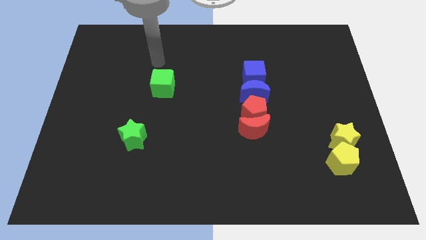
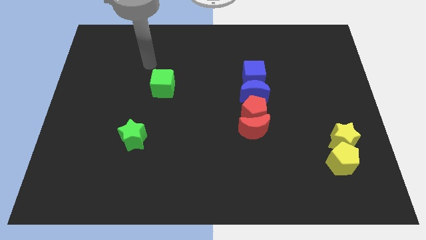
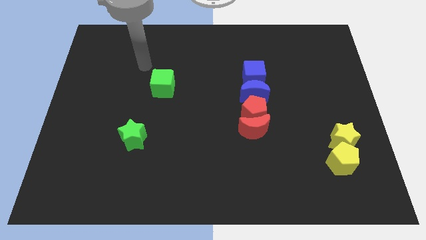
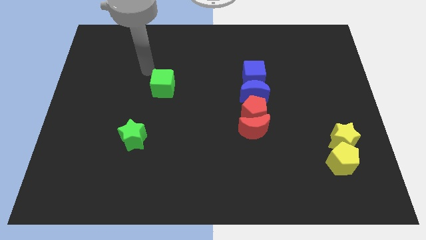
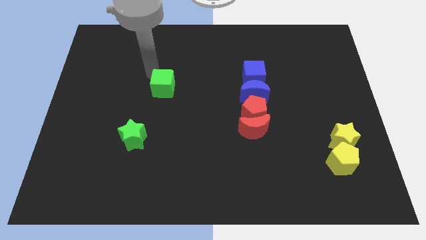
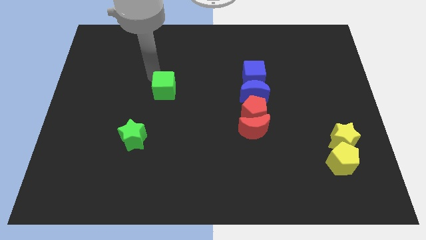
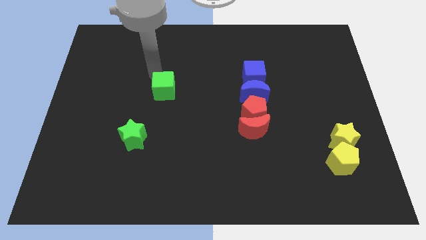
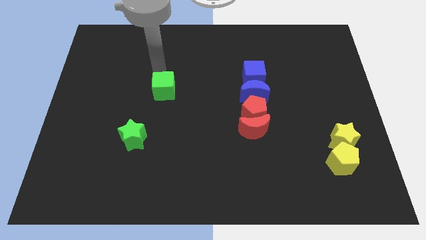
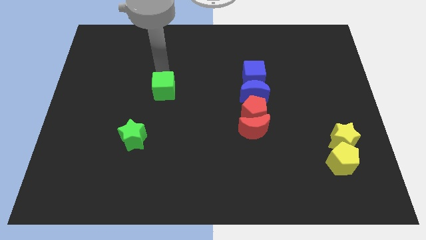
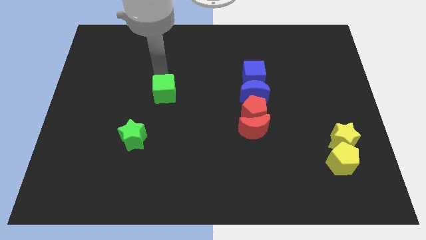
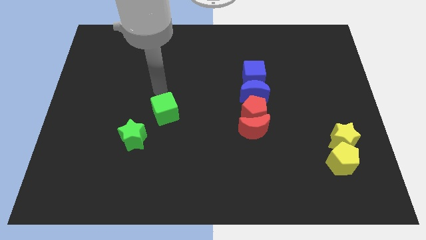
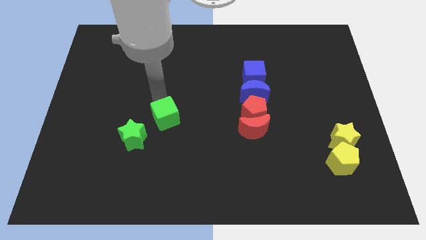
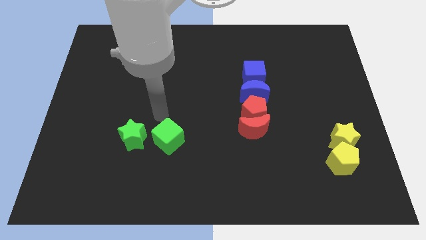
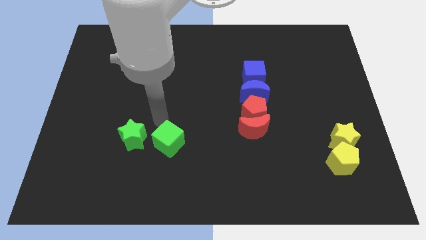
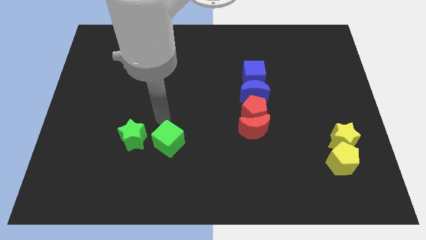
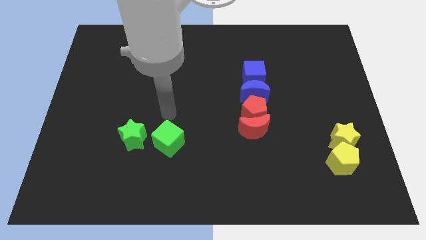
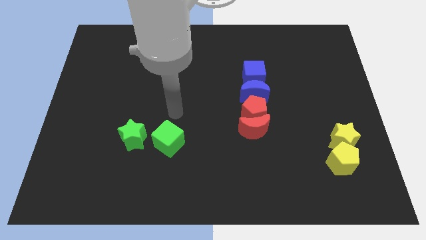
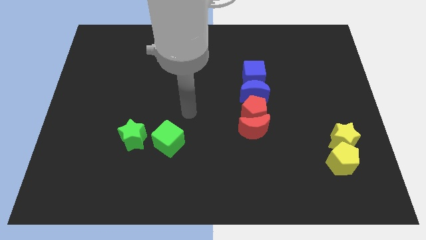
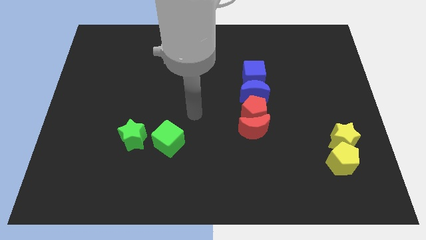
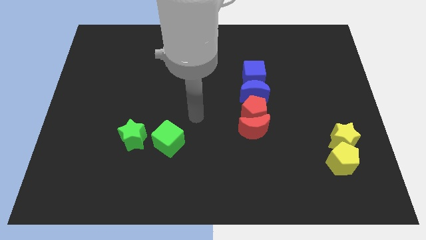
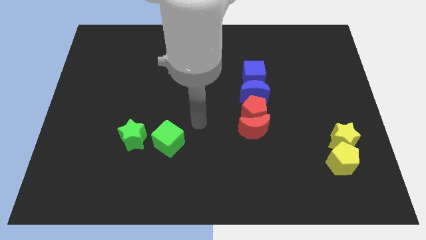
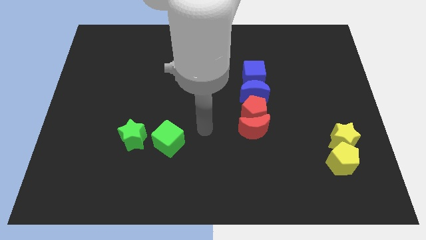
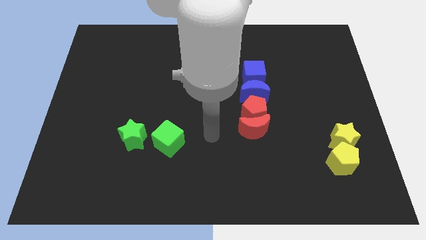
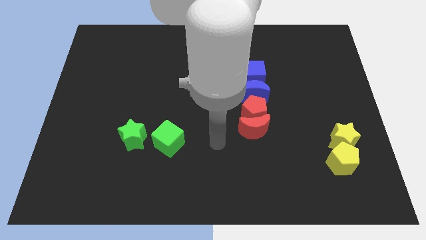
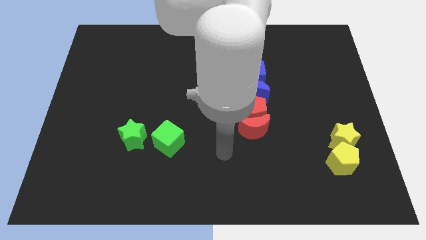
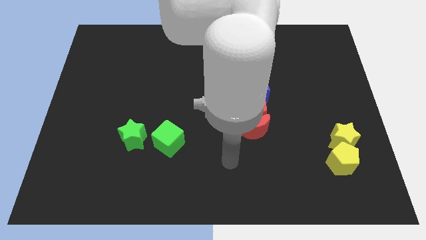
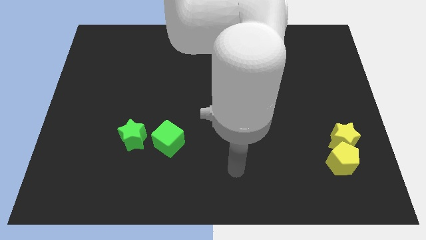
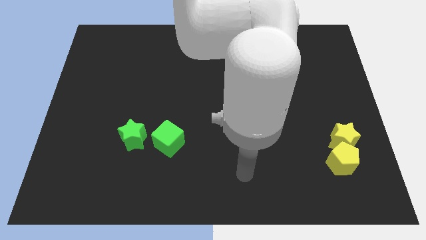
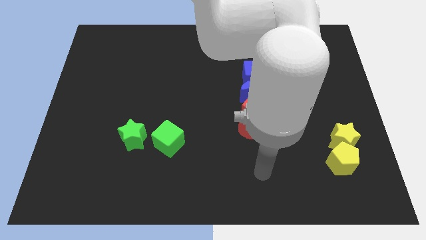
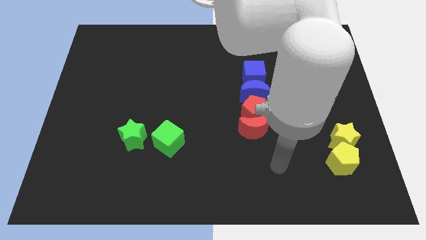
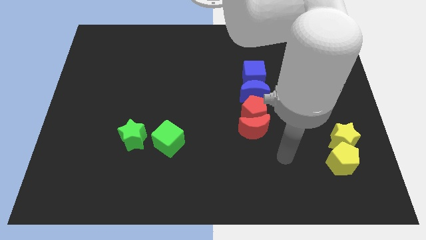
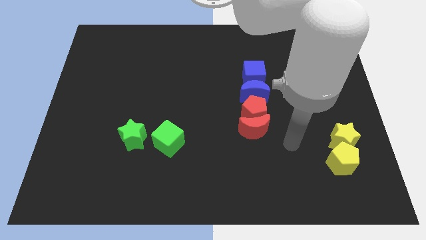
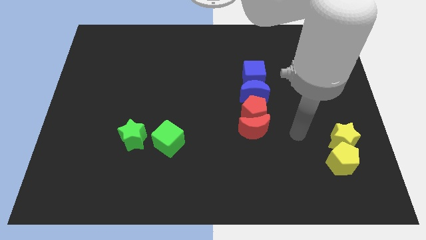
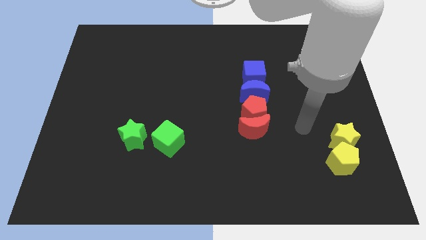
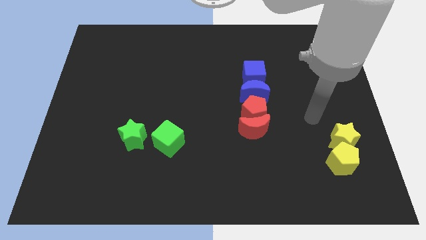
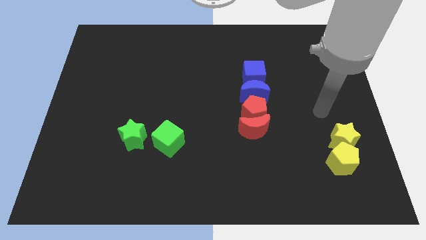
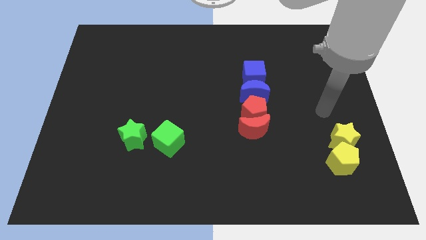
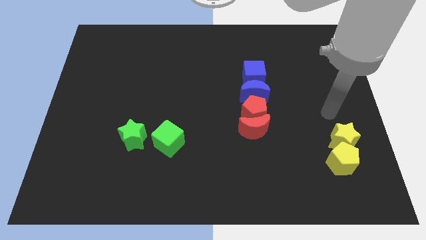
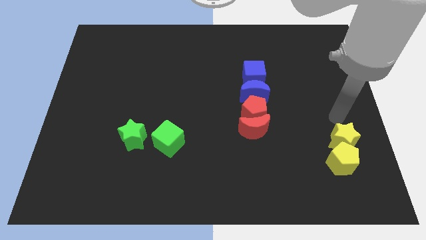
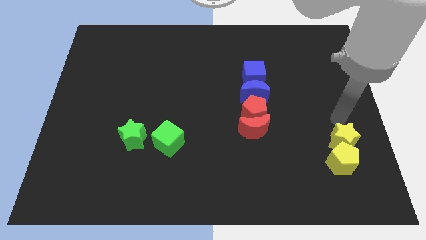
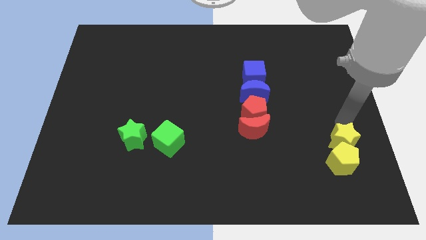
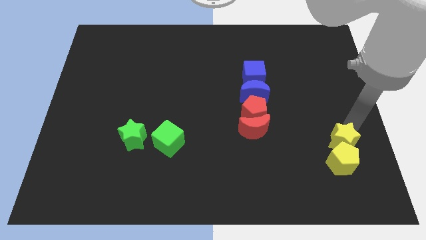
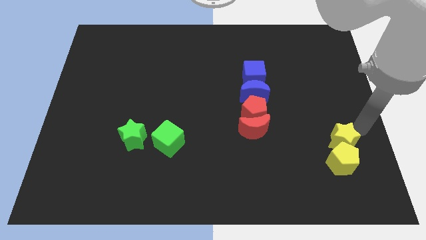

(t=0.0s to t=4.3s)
place the green cube right side of the green star

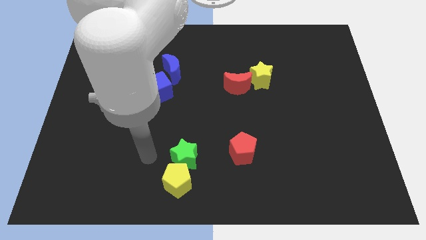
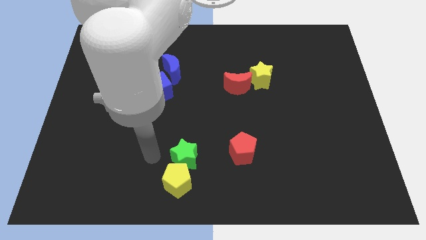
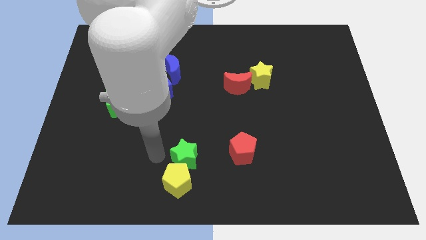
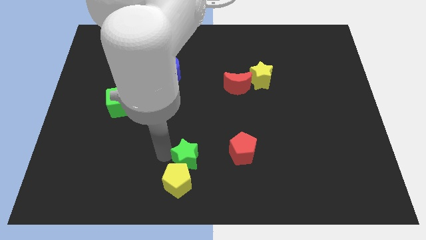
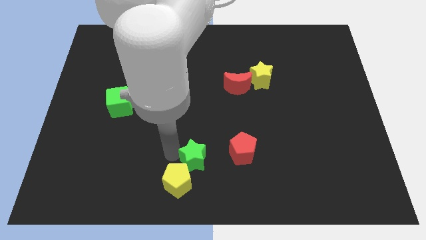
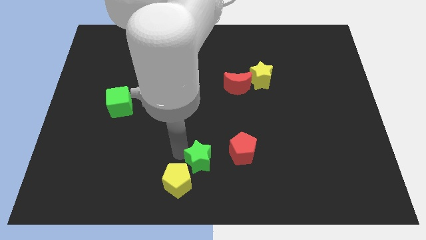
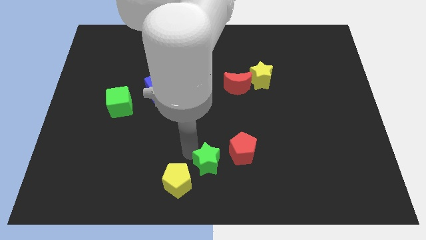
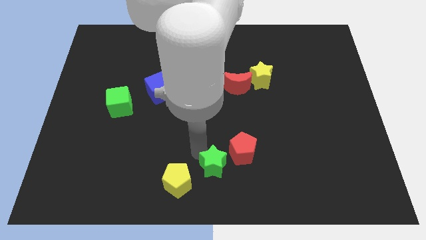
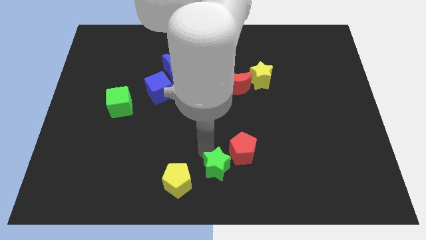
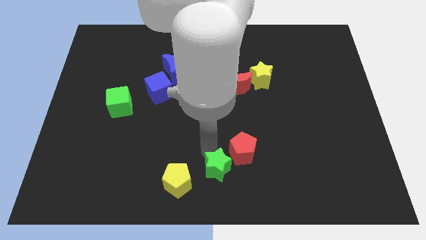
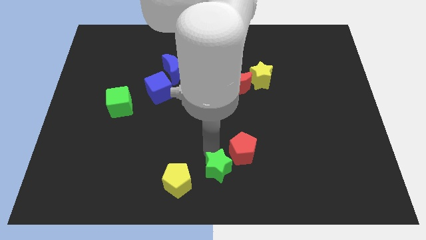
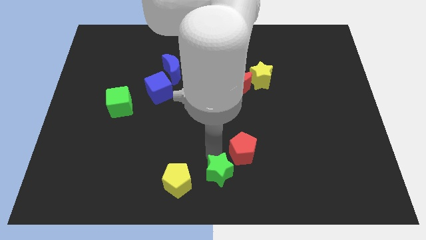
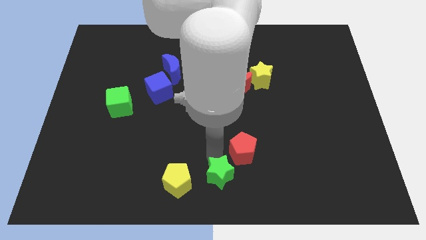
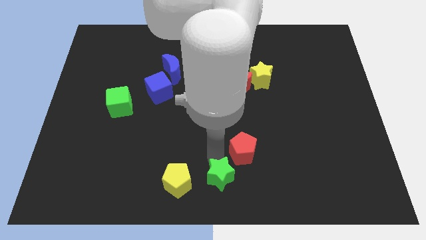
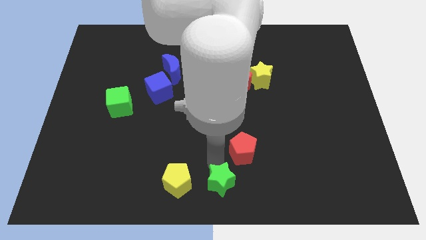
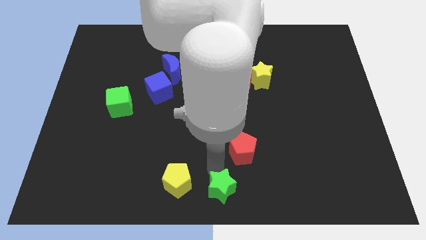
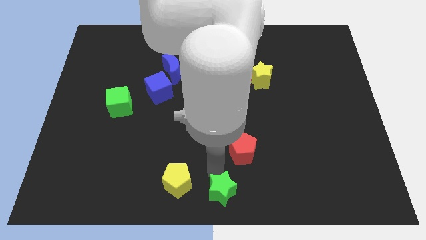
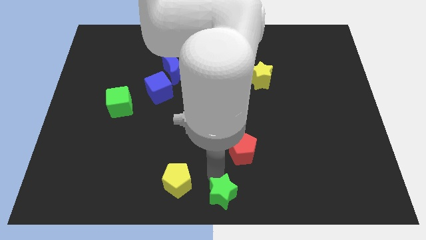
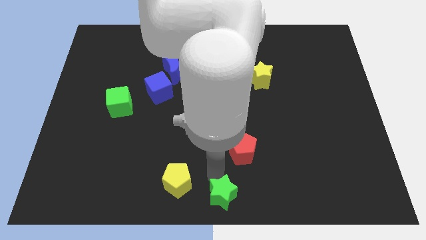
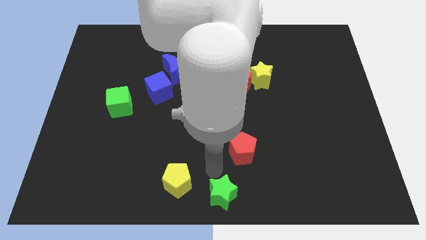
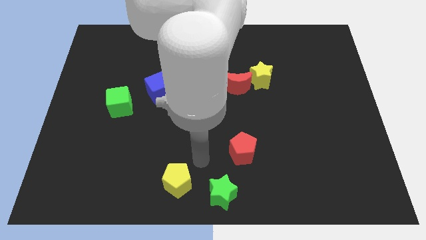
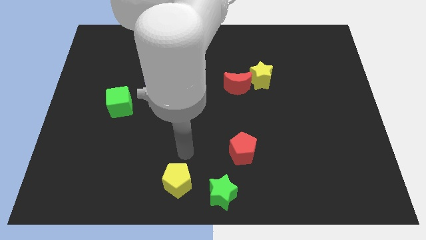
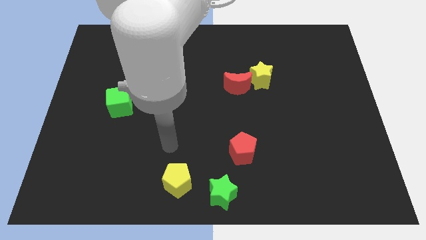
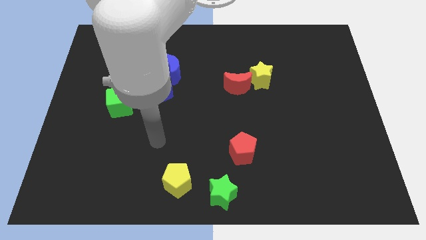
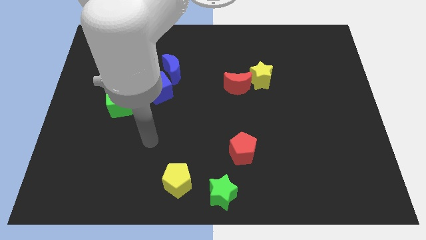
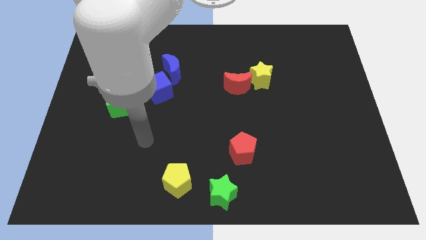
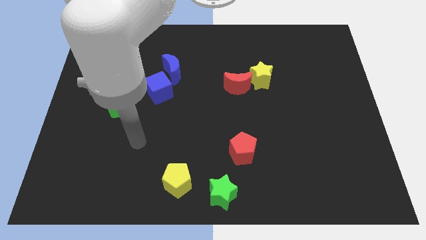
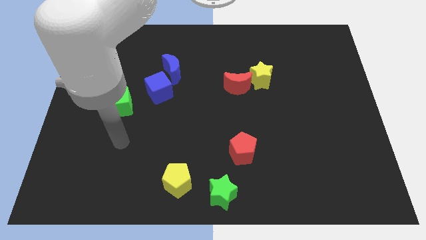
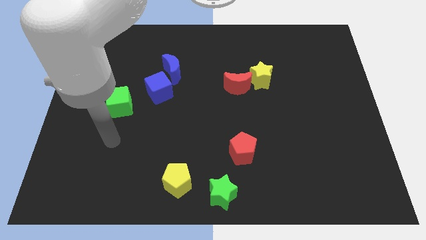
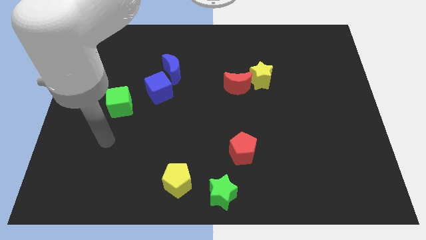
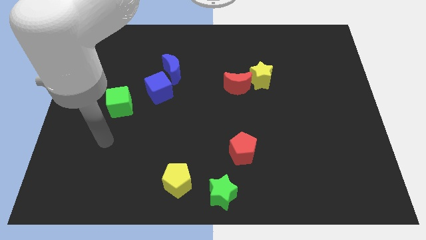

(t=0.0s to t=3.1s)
push the green star to the bottom middle of the board

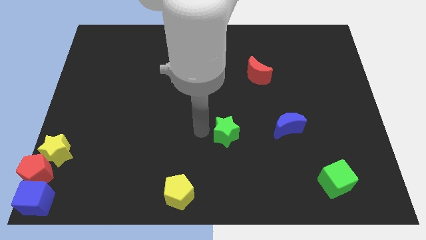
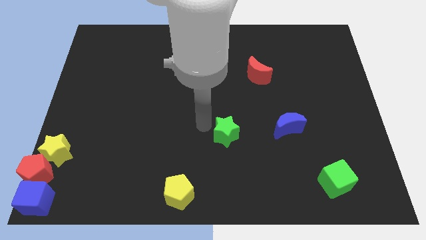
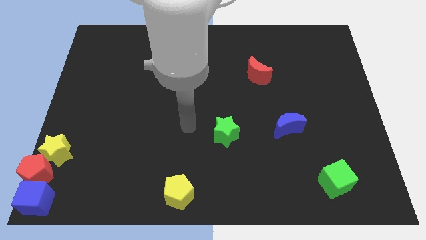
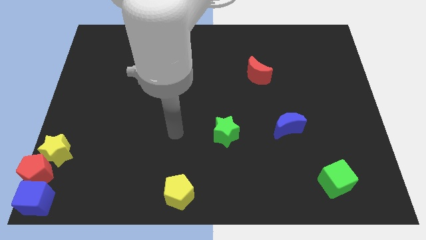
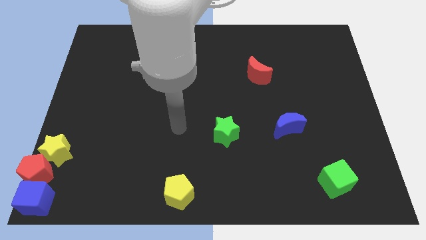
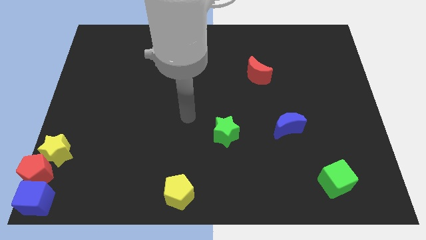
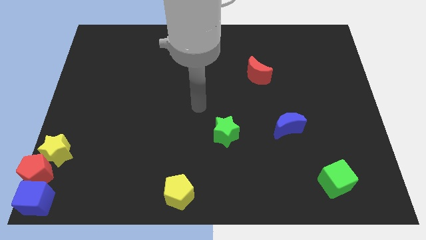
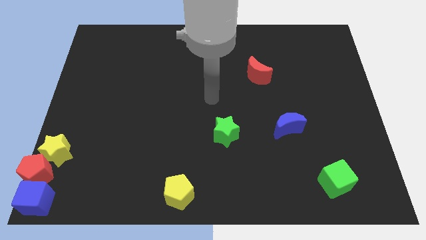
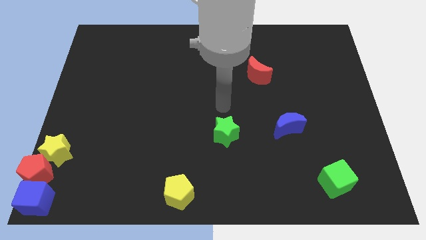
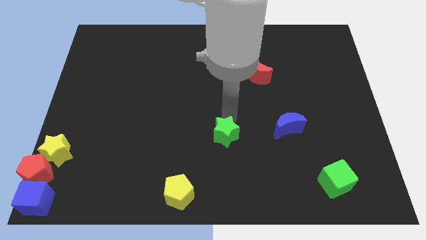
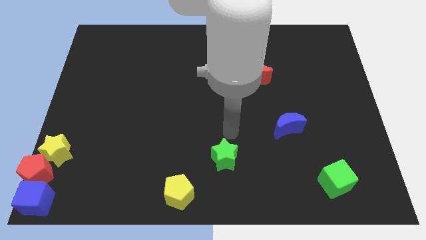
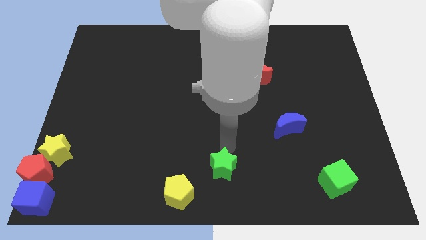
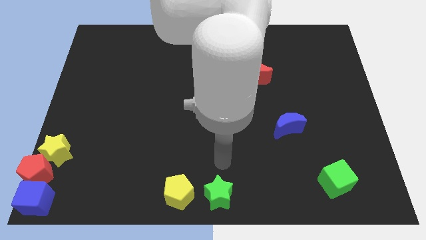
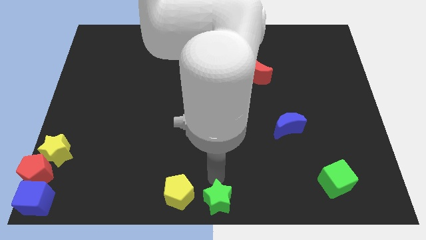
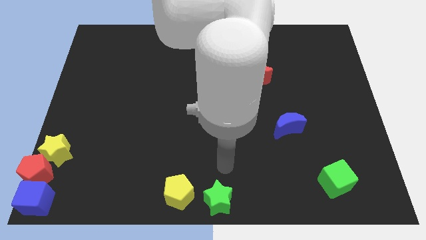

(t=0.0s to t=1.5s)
move the green star towards the right side of the yellow pentagon
